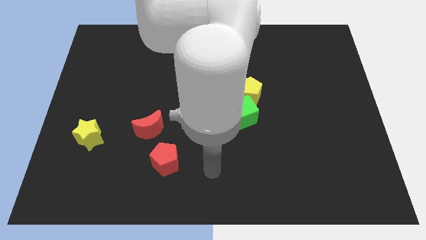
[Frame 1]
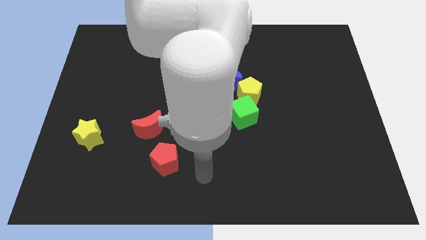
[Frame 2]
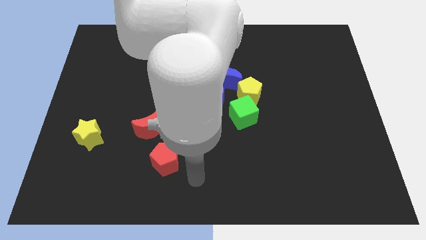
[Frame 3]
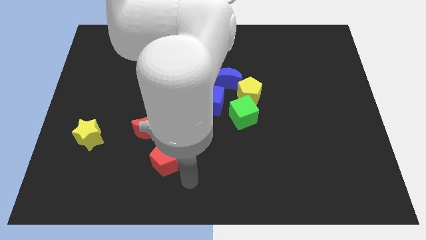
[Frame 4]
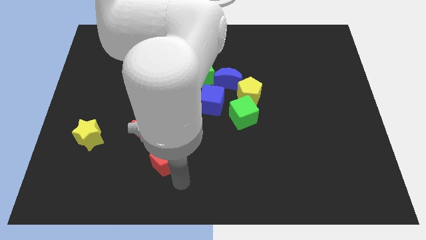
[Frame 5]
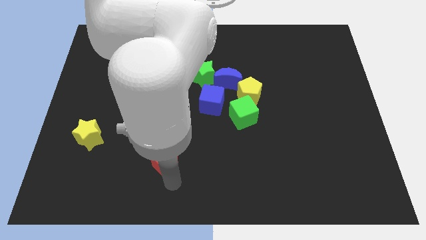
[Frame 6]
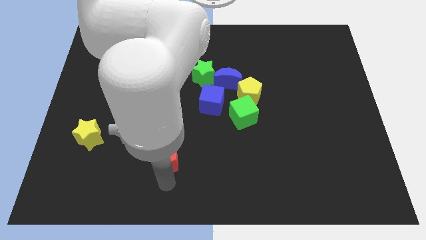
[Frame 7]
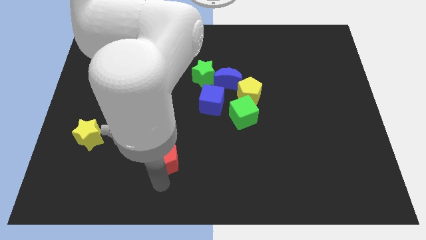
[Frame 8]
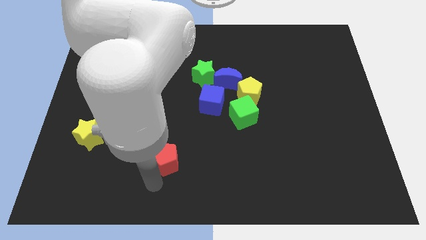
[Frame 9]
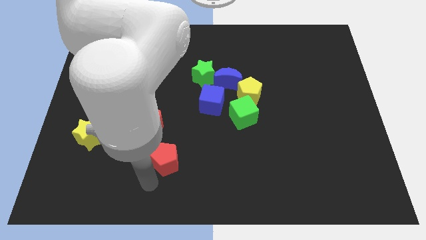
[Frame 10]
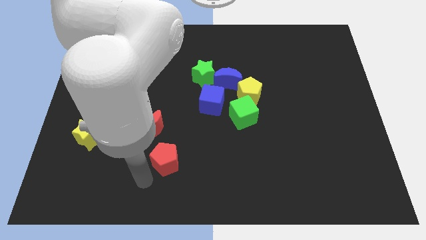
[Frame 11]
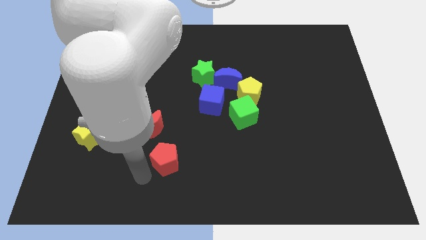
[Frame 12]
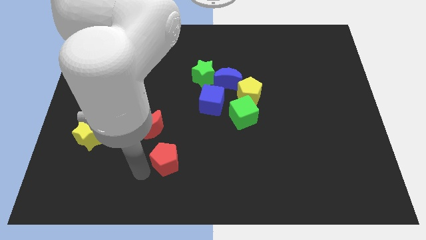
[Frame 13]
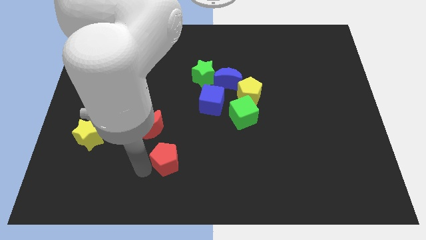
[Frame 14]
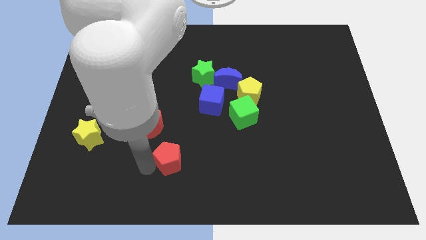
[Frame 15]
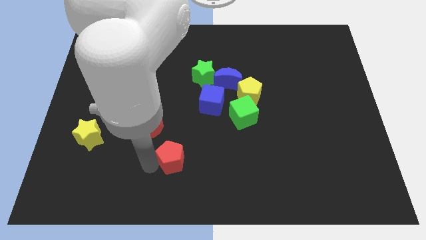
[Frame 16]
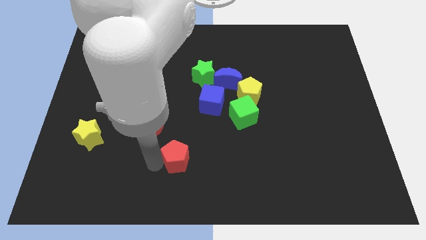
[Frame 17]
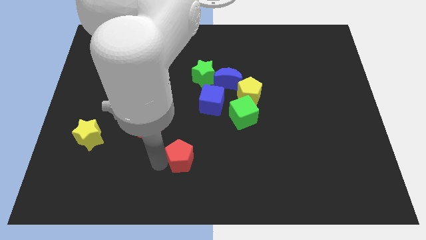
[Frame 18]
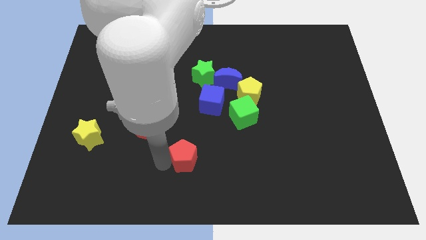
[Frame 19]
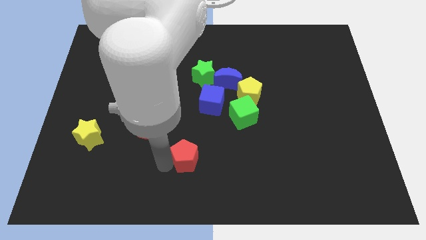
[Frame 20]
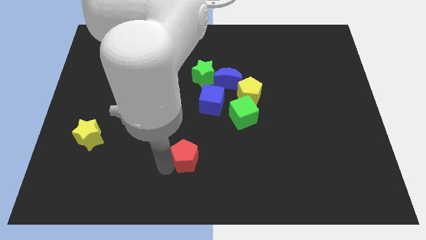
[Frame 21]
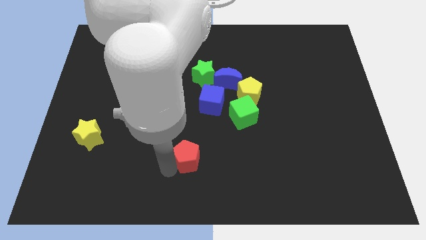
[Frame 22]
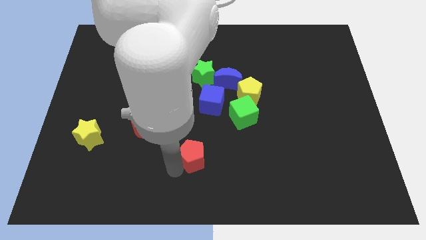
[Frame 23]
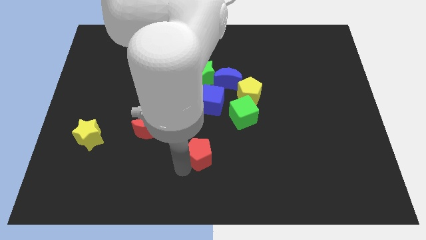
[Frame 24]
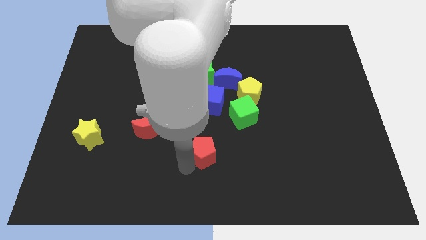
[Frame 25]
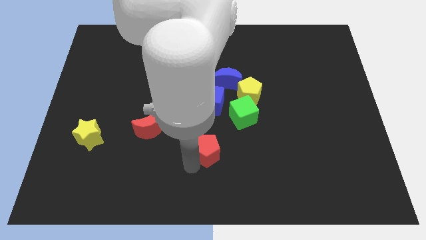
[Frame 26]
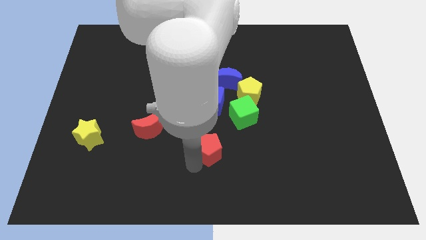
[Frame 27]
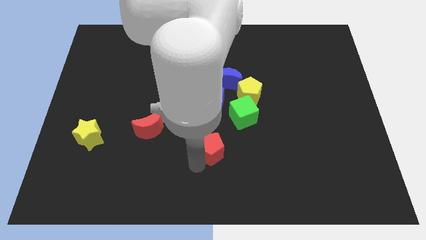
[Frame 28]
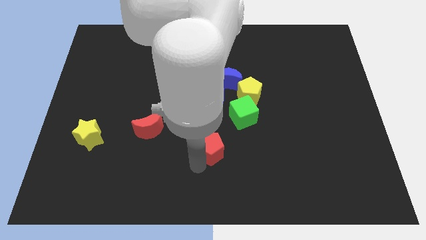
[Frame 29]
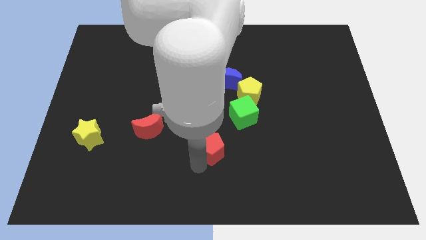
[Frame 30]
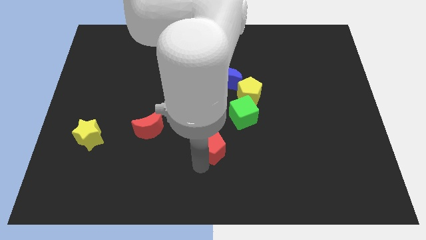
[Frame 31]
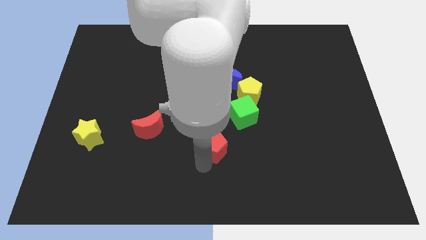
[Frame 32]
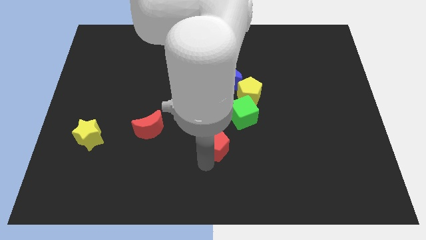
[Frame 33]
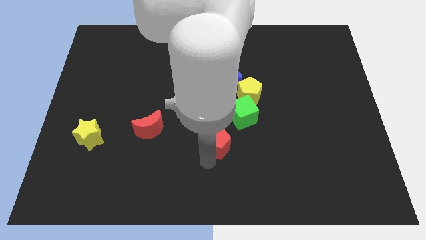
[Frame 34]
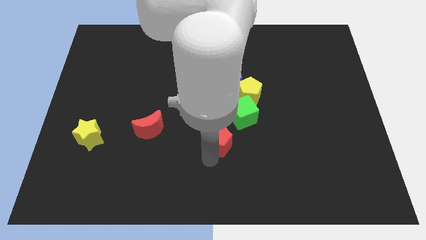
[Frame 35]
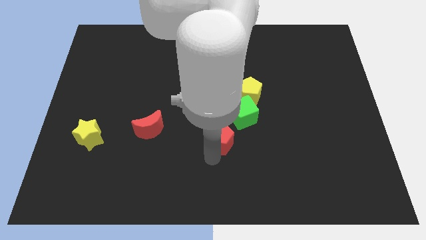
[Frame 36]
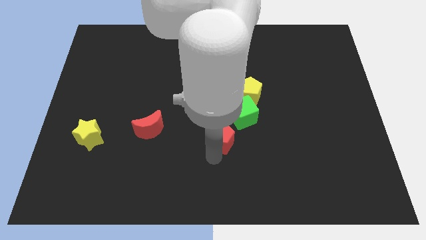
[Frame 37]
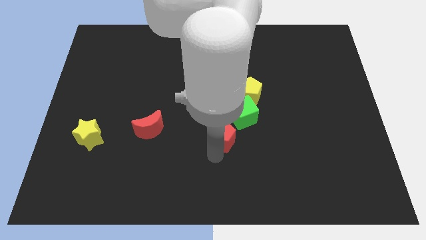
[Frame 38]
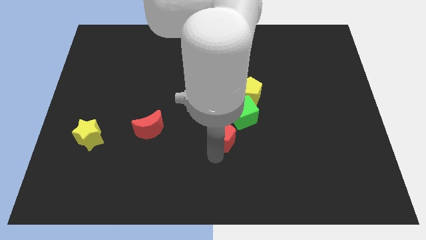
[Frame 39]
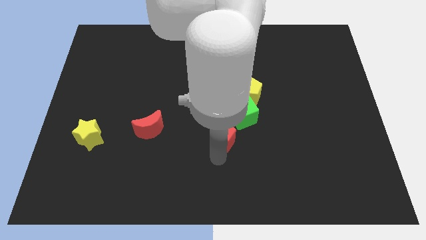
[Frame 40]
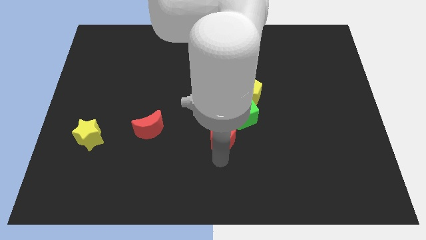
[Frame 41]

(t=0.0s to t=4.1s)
push the red pentagon towards the green cube

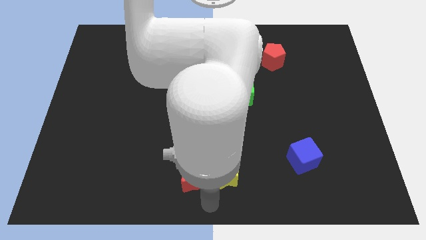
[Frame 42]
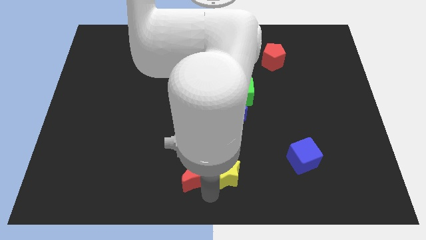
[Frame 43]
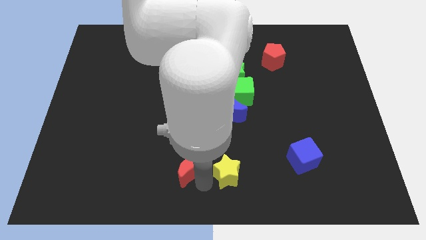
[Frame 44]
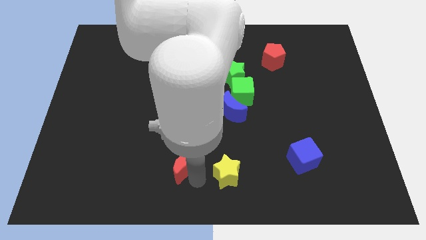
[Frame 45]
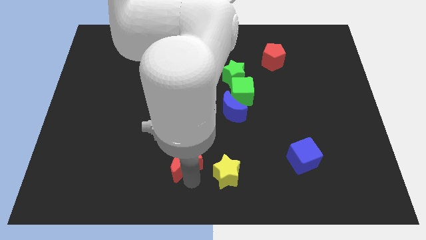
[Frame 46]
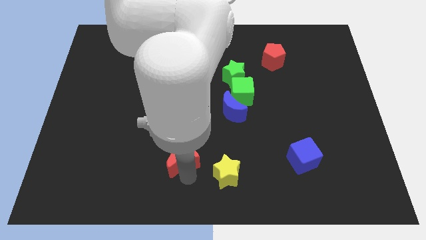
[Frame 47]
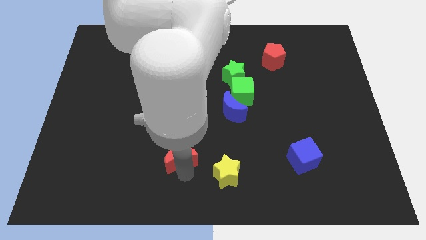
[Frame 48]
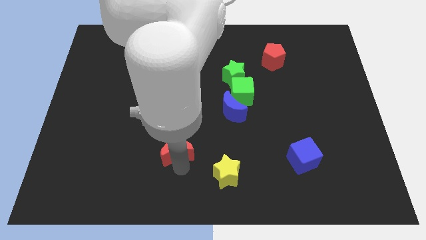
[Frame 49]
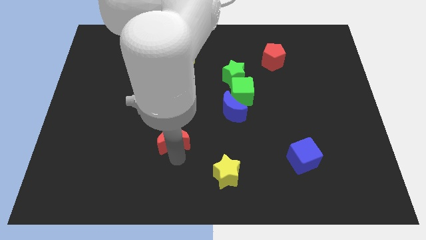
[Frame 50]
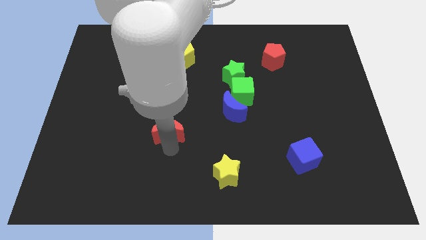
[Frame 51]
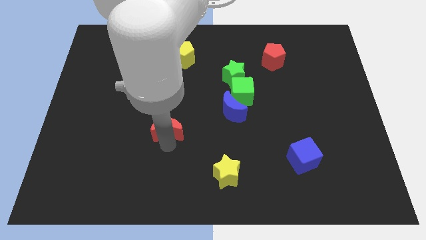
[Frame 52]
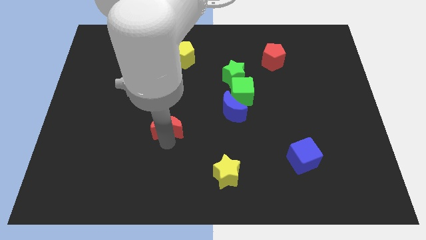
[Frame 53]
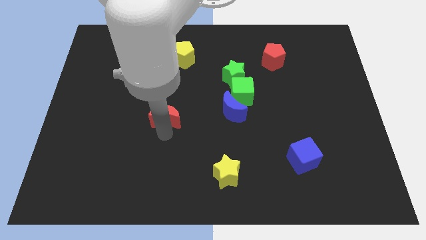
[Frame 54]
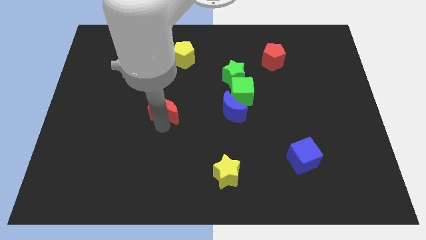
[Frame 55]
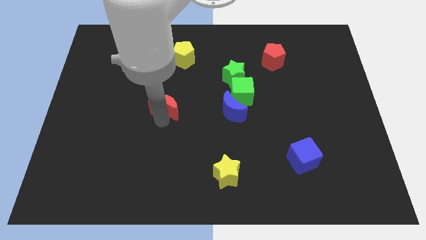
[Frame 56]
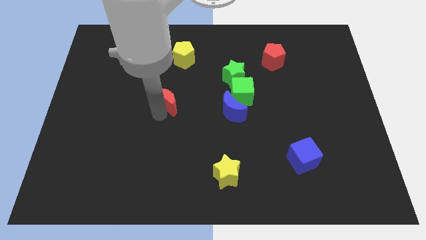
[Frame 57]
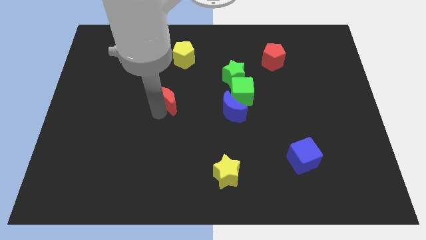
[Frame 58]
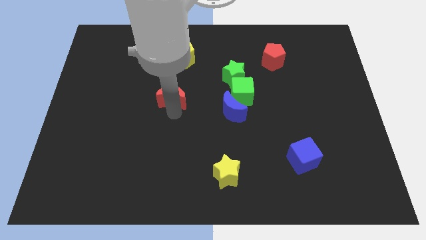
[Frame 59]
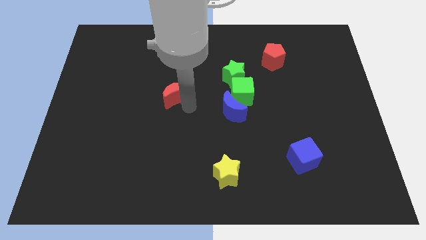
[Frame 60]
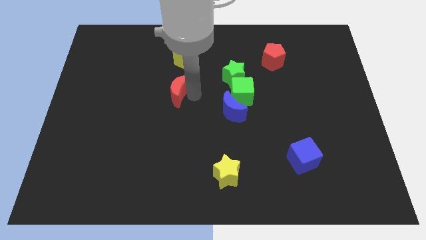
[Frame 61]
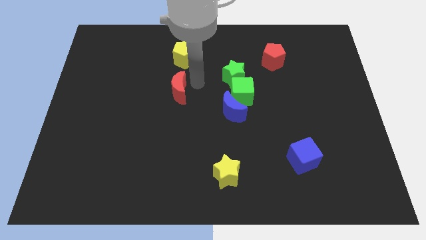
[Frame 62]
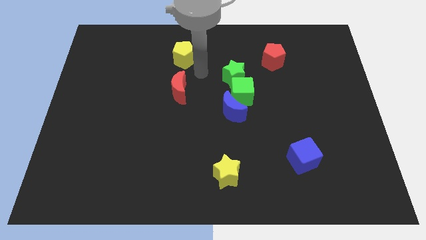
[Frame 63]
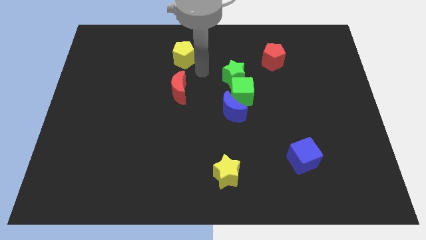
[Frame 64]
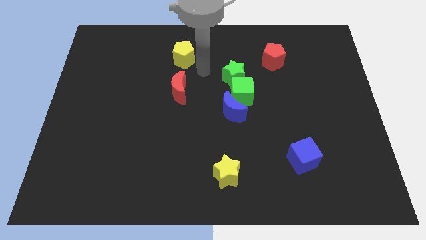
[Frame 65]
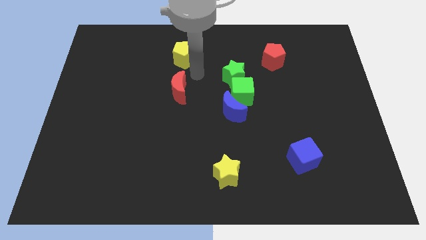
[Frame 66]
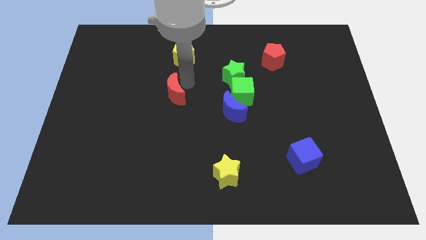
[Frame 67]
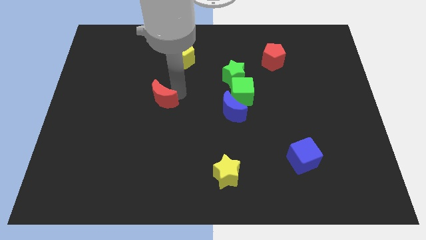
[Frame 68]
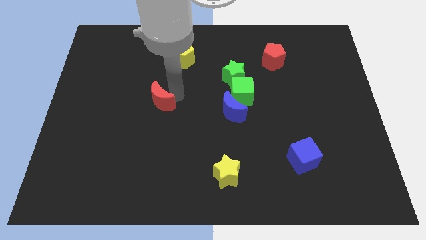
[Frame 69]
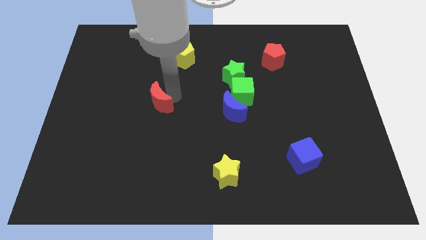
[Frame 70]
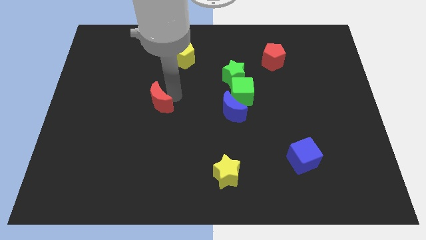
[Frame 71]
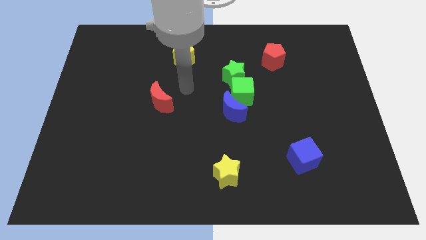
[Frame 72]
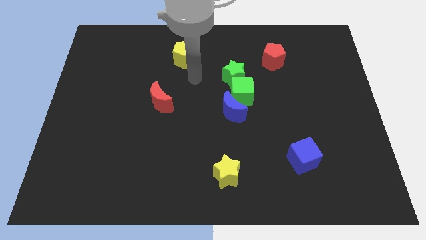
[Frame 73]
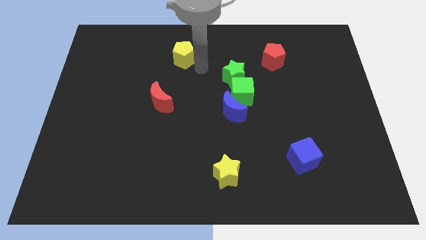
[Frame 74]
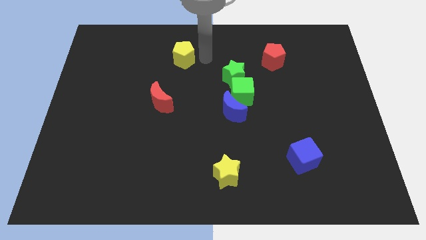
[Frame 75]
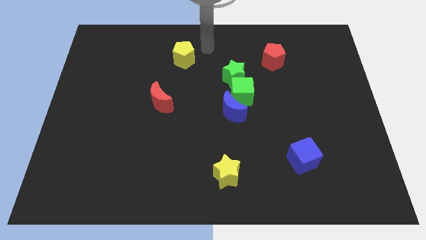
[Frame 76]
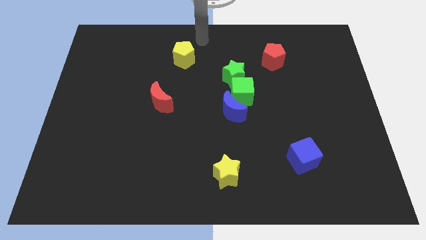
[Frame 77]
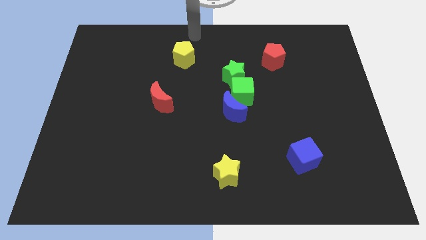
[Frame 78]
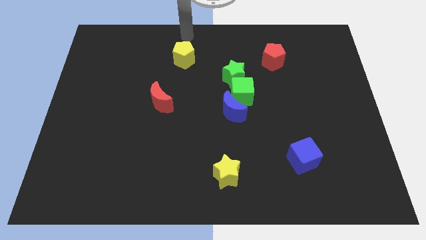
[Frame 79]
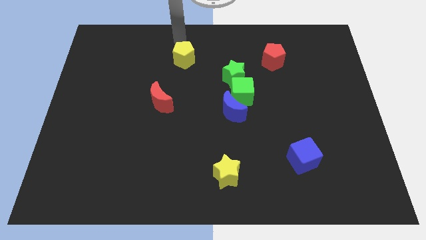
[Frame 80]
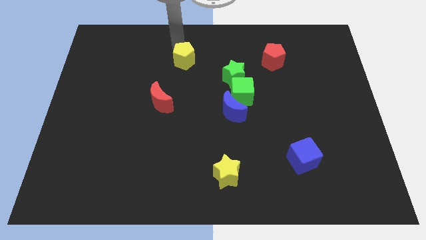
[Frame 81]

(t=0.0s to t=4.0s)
drag red crescent left to blue crescent

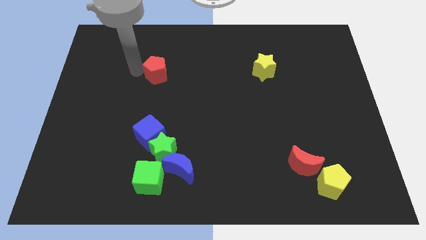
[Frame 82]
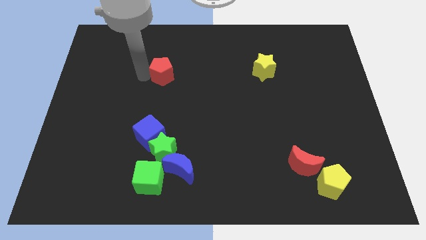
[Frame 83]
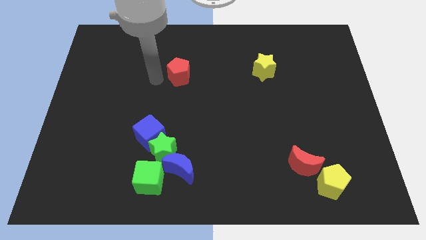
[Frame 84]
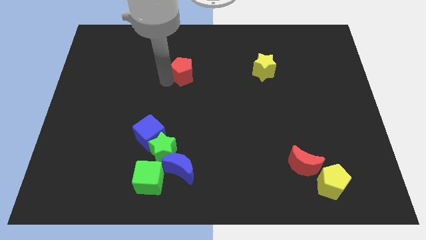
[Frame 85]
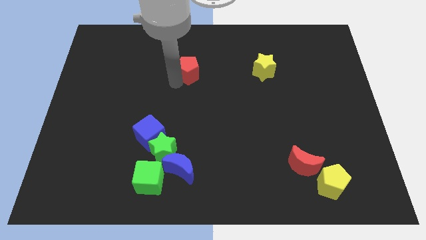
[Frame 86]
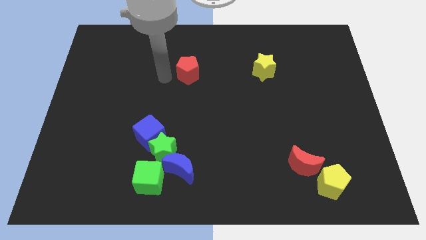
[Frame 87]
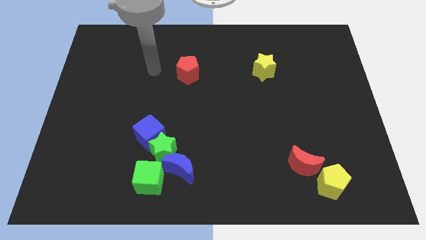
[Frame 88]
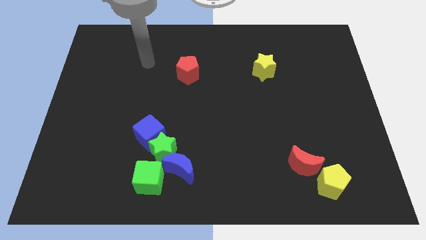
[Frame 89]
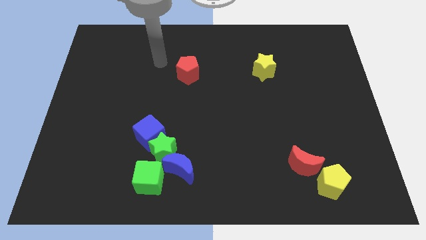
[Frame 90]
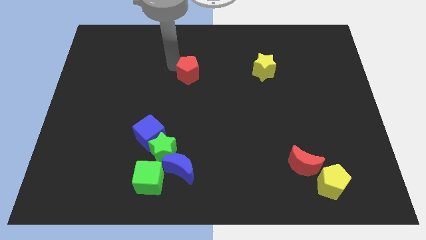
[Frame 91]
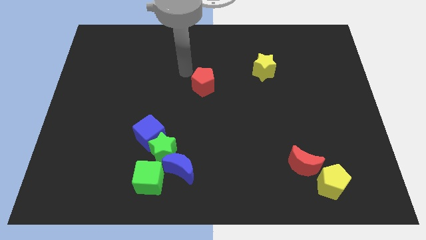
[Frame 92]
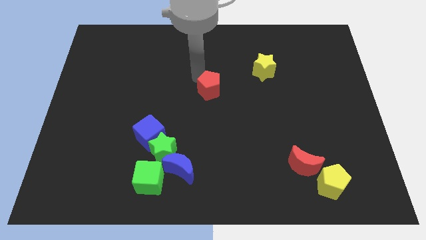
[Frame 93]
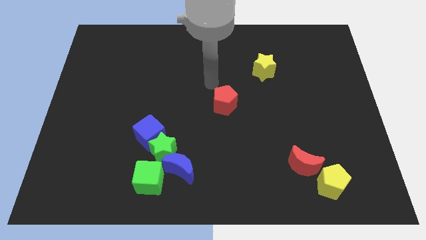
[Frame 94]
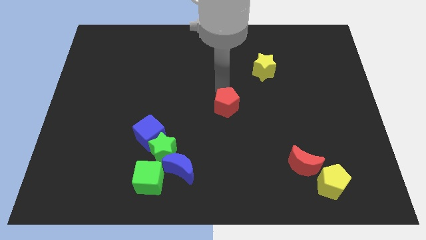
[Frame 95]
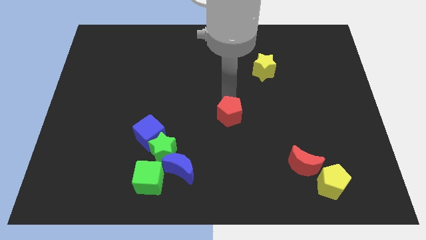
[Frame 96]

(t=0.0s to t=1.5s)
push the red pentagon to the center of the board
